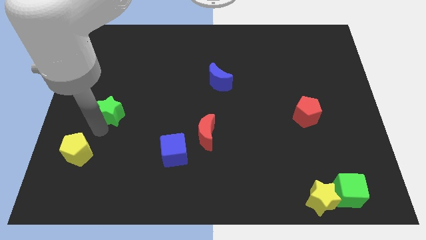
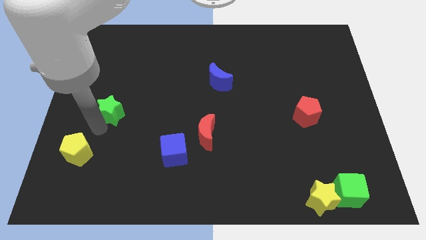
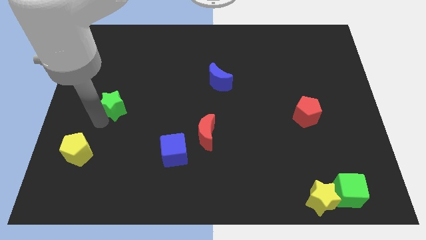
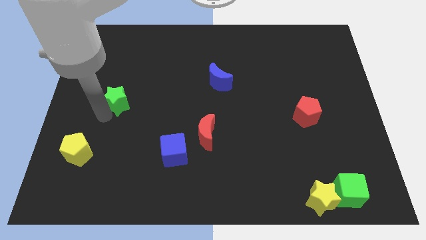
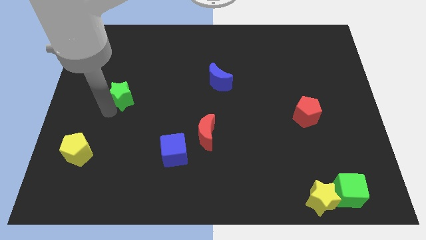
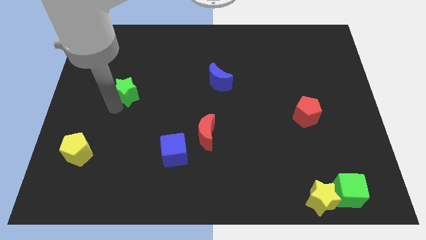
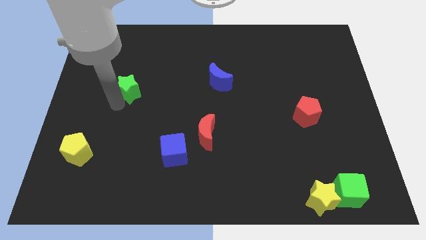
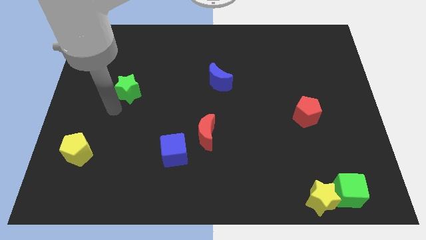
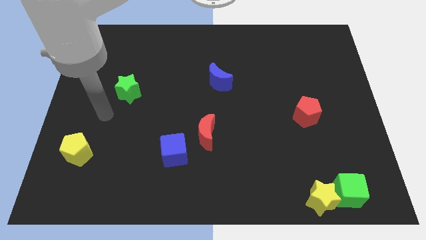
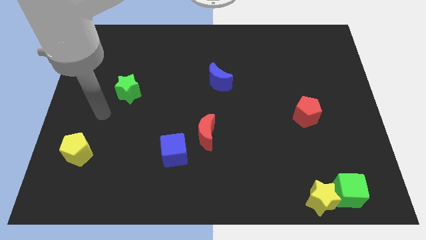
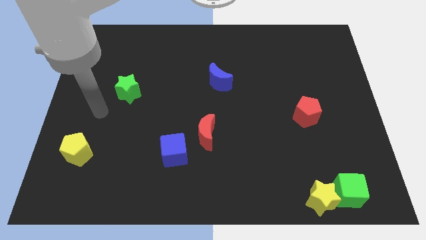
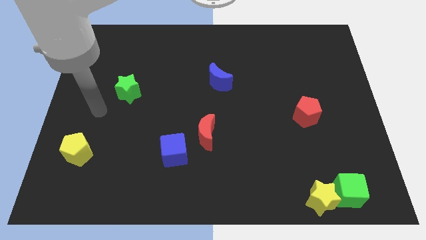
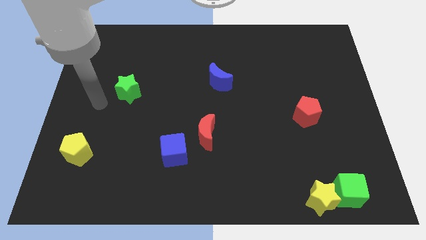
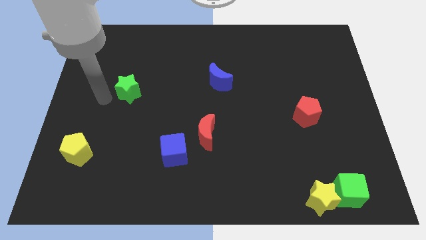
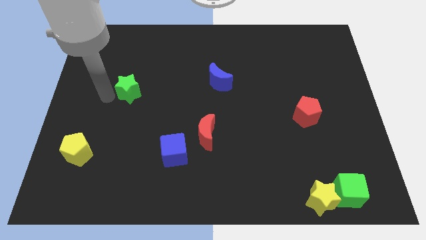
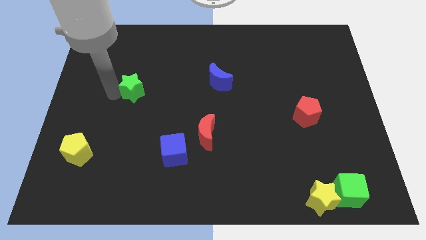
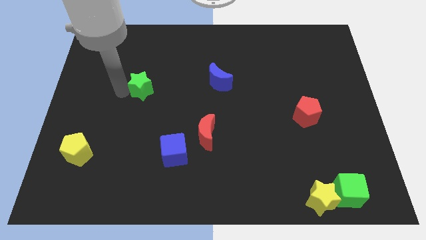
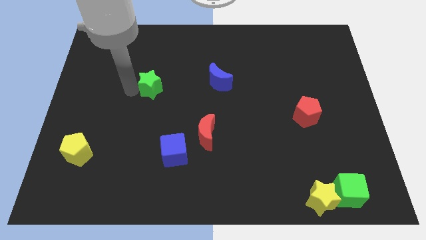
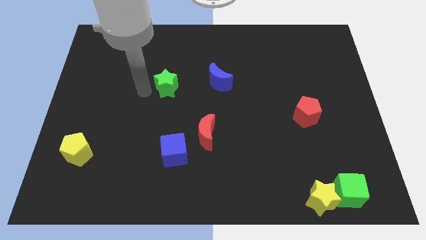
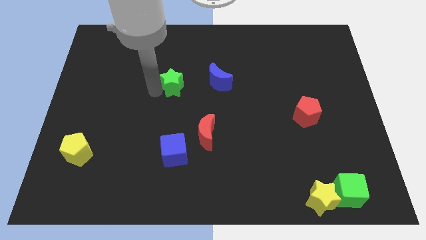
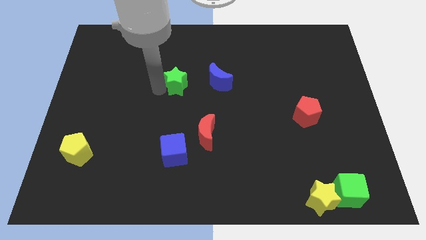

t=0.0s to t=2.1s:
move the green star to the top of the blue cube

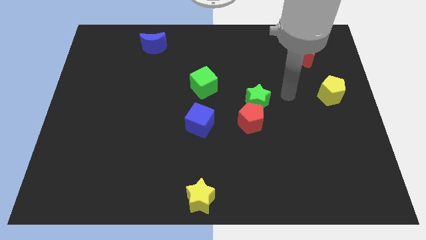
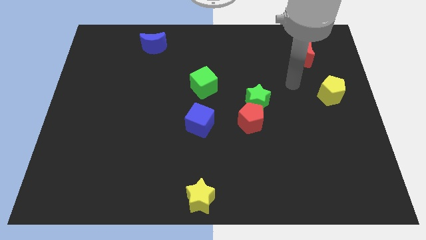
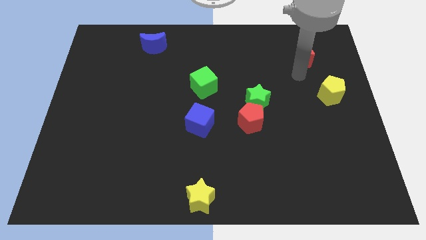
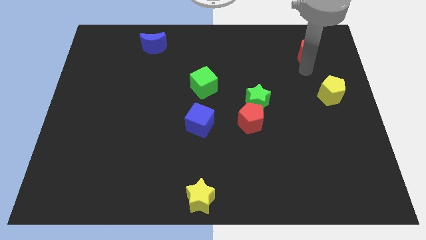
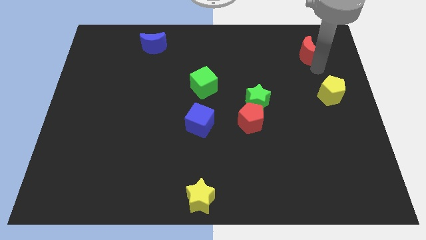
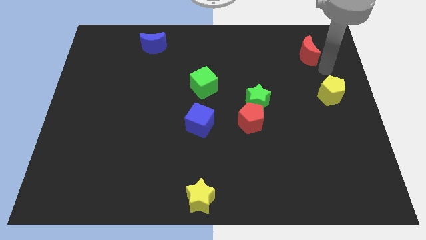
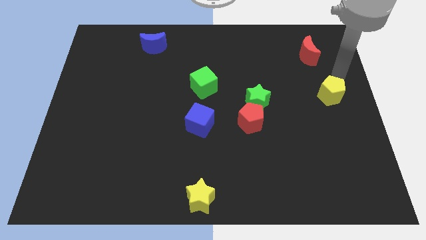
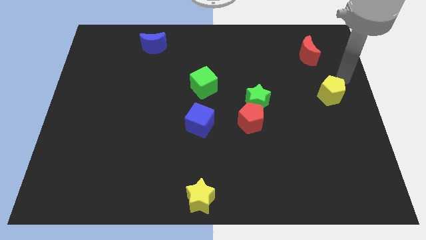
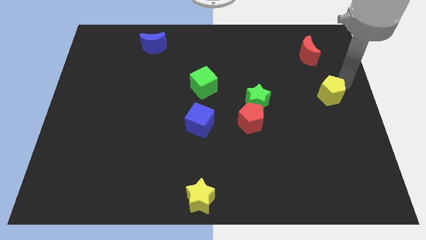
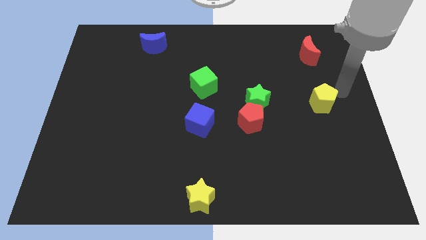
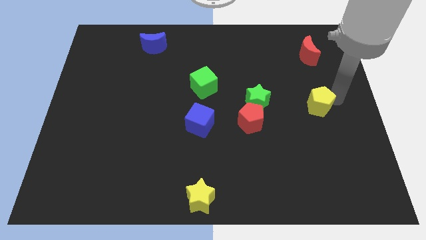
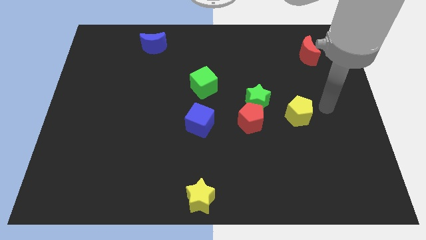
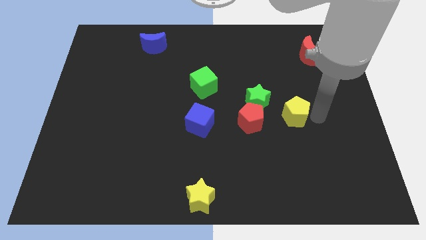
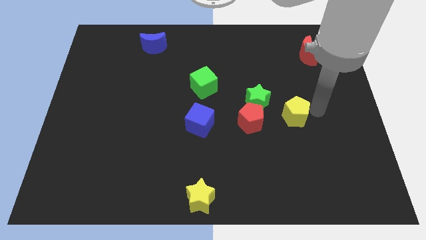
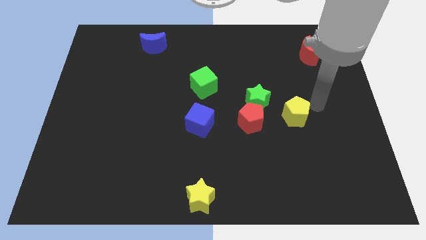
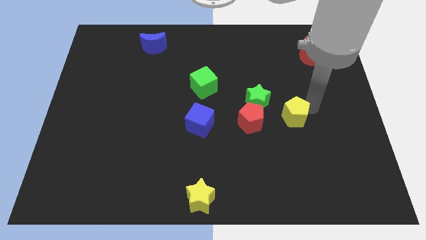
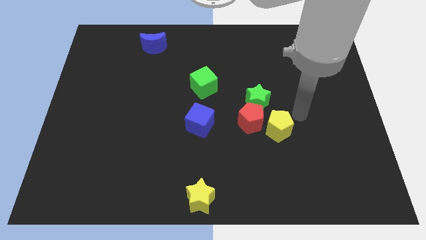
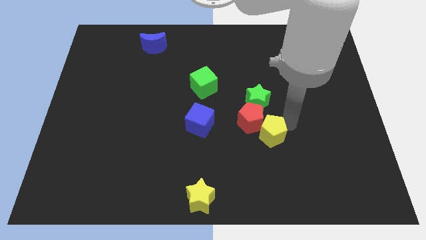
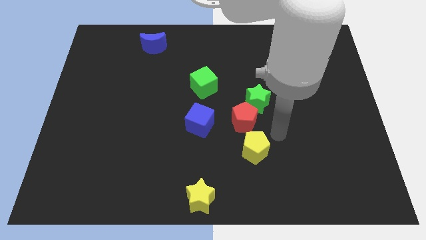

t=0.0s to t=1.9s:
move the yellow pentagon to bottom of the red pentagon

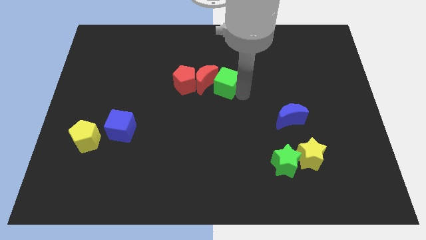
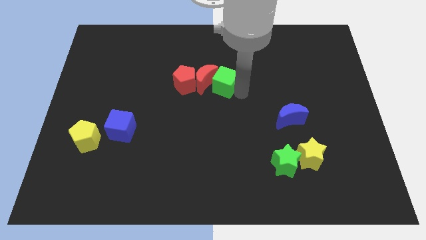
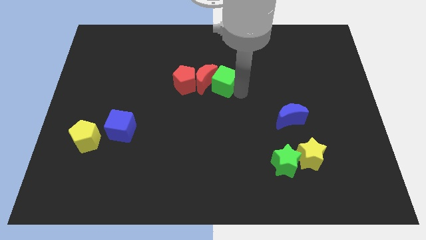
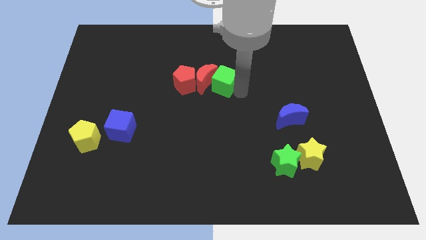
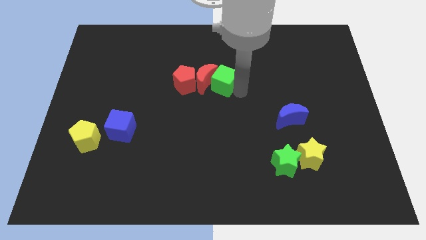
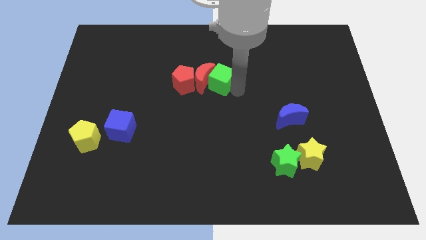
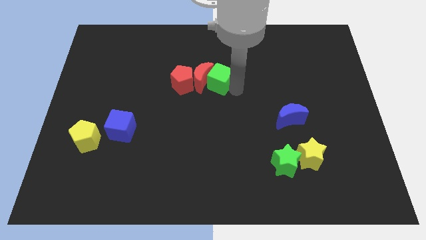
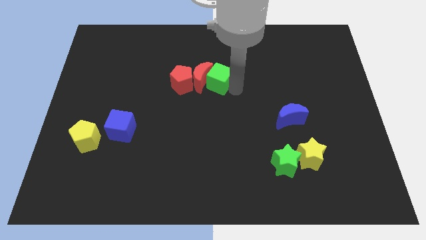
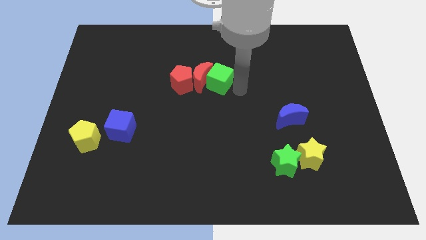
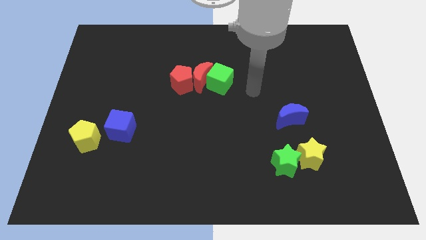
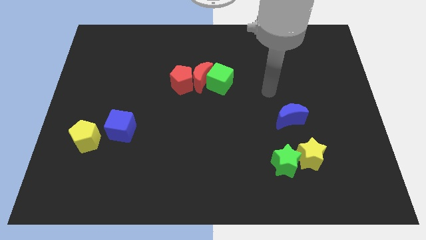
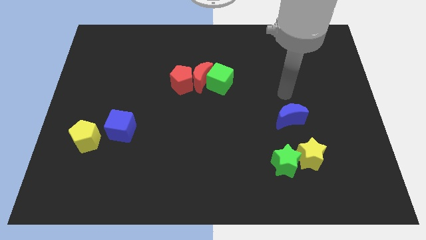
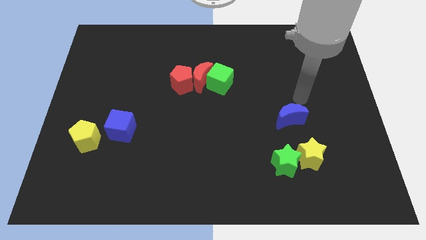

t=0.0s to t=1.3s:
push the green cube into the red moon

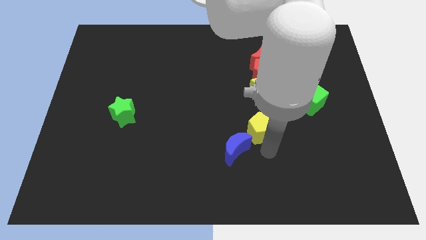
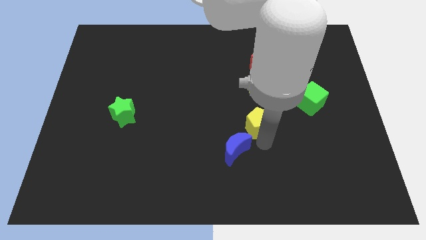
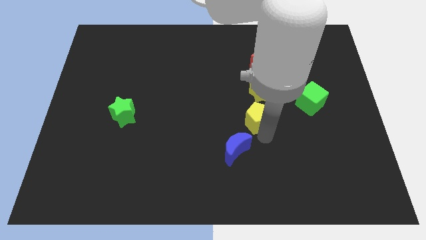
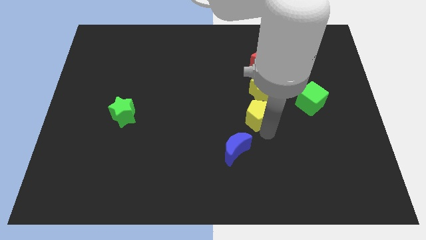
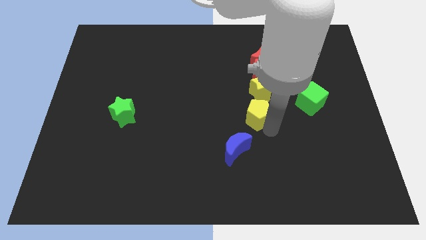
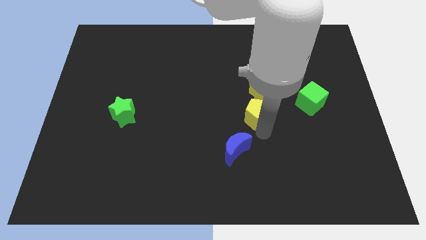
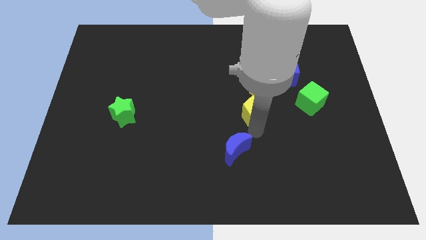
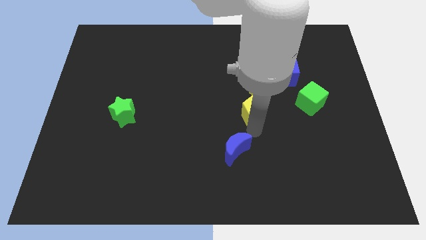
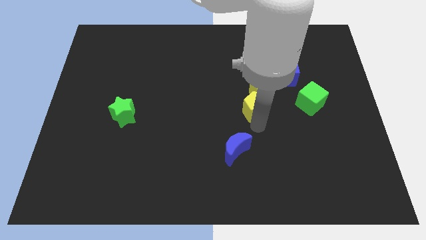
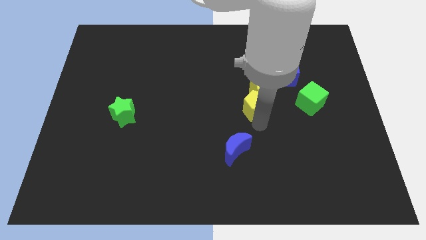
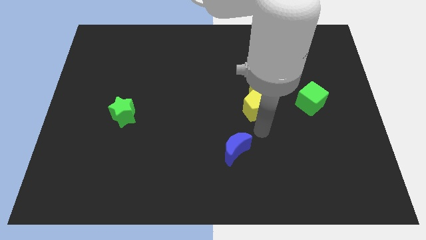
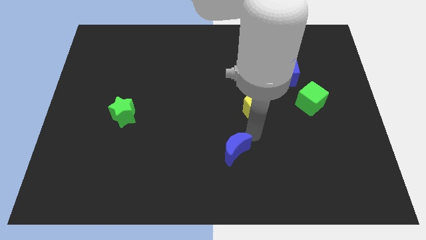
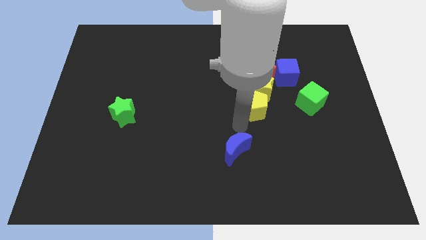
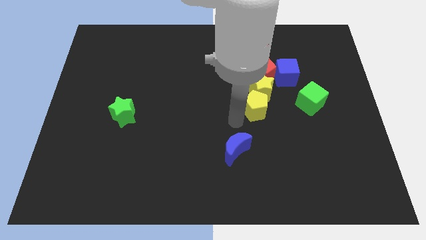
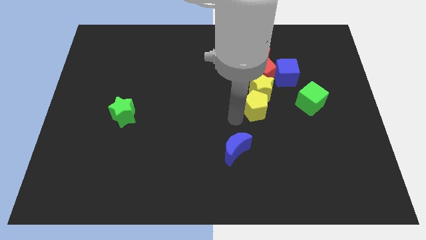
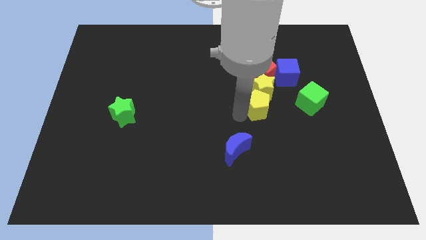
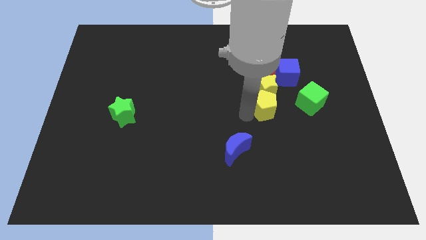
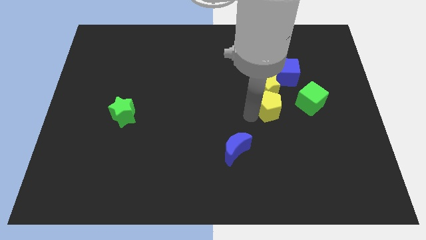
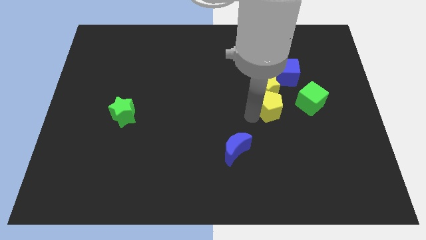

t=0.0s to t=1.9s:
push the yellow pentagon below the yellow star

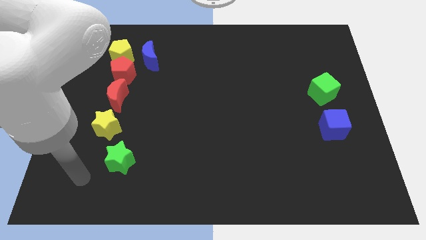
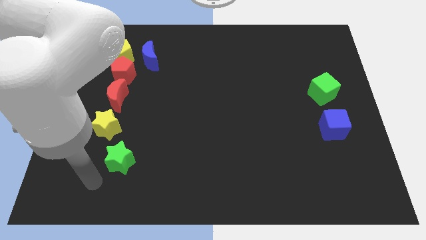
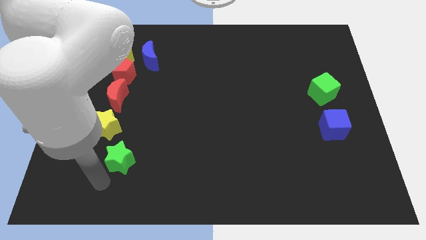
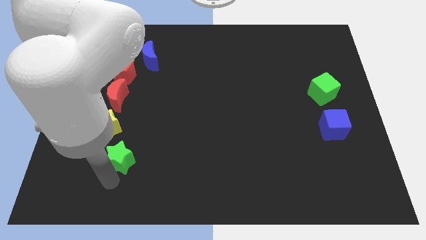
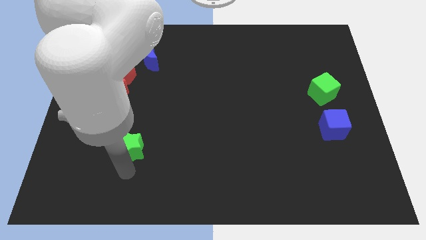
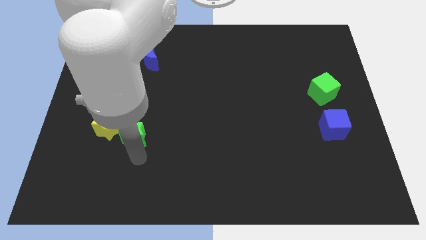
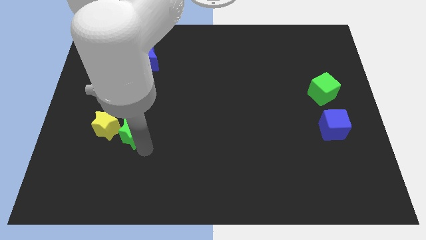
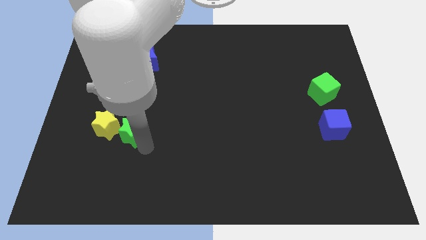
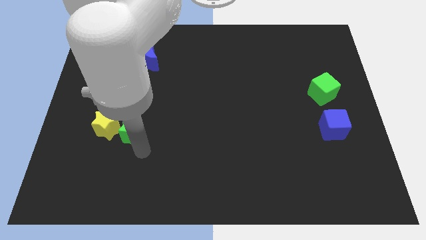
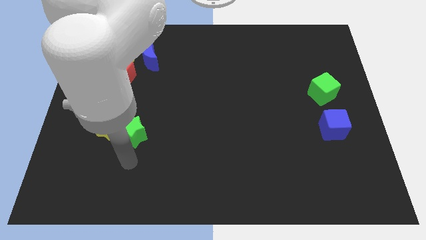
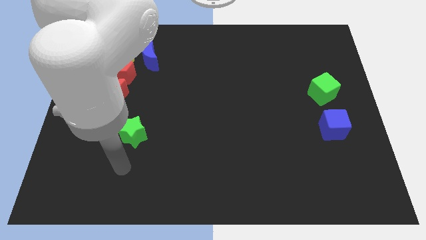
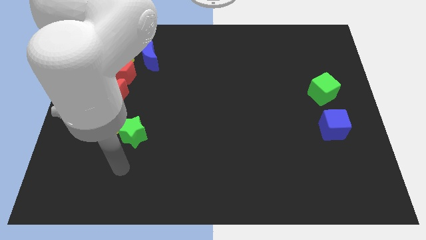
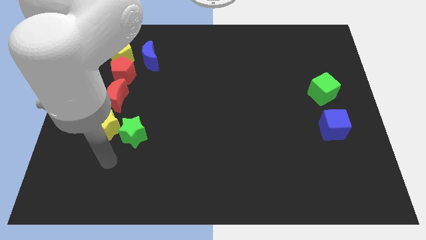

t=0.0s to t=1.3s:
place green star to the right side of the yellow star

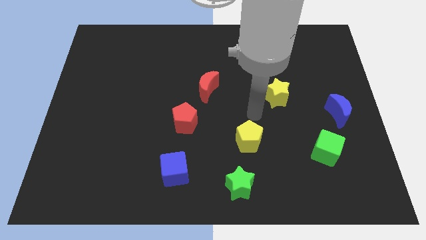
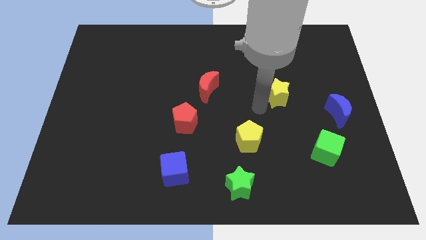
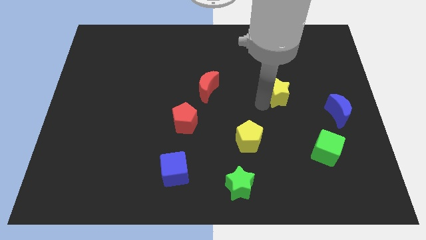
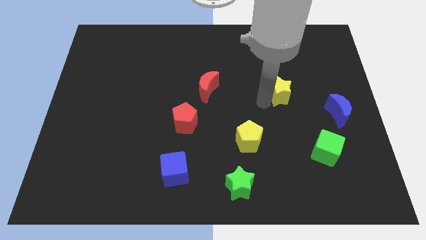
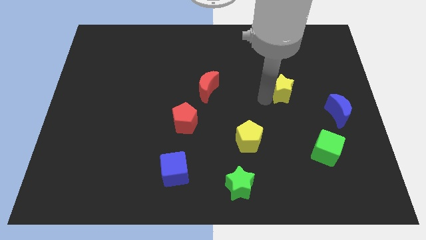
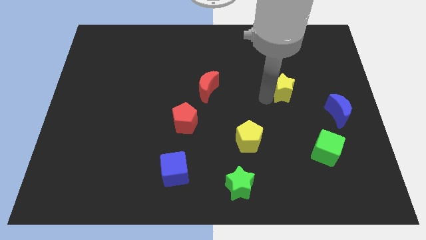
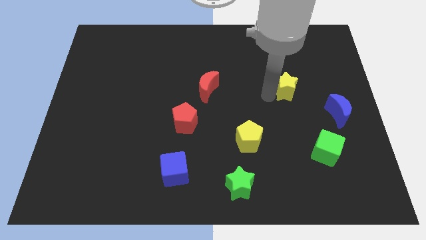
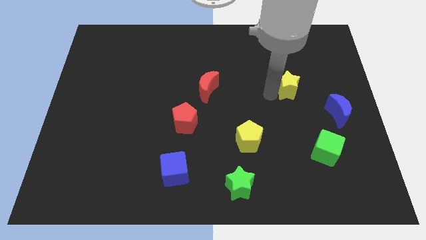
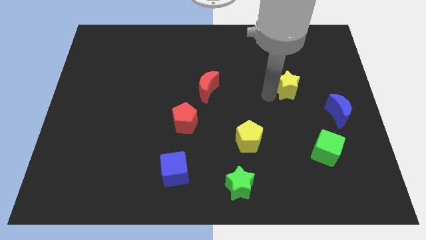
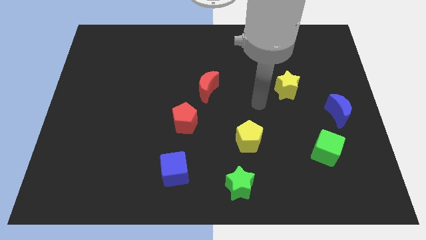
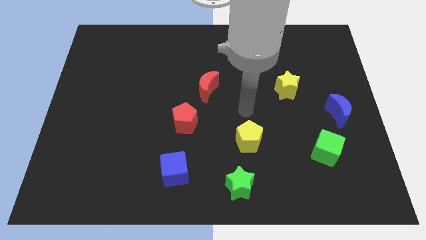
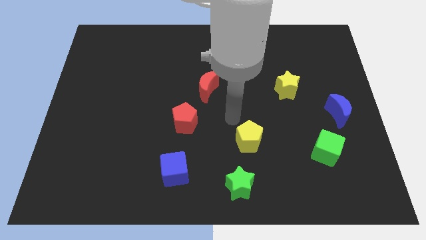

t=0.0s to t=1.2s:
push yellow star upwards
